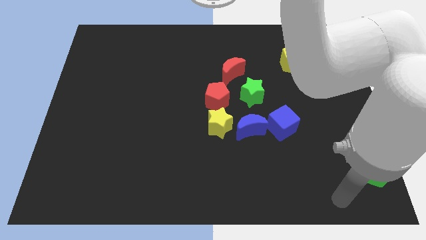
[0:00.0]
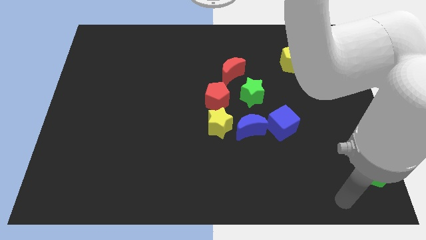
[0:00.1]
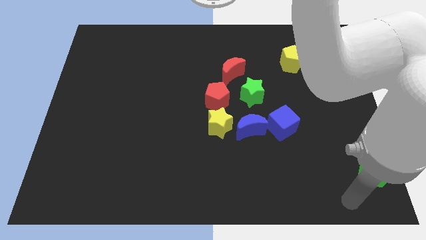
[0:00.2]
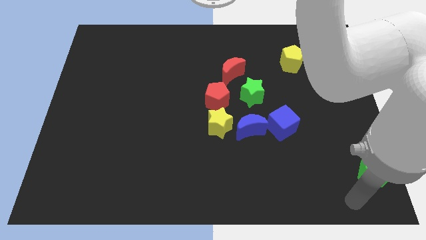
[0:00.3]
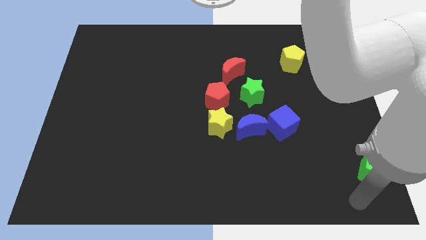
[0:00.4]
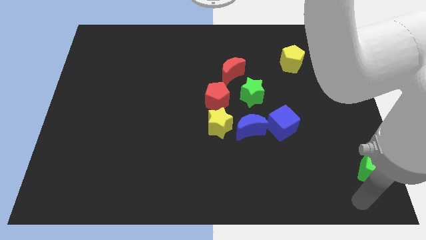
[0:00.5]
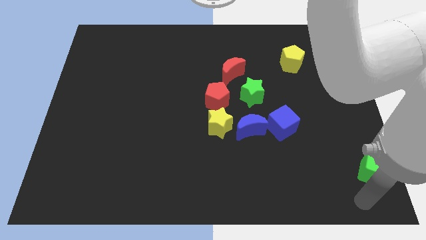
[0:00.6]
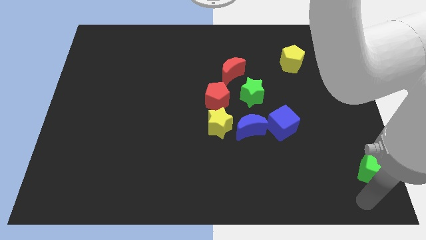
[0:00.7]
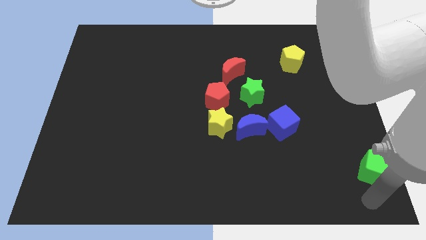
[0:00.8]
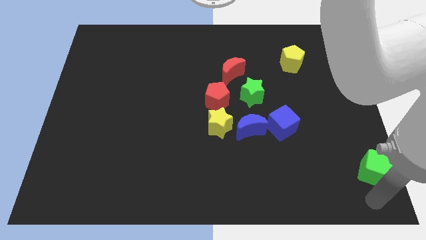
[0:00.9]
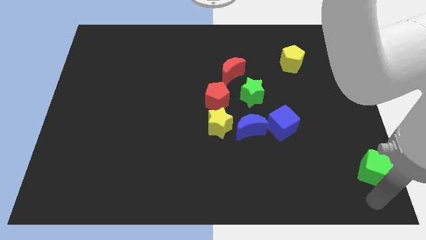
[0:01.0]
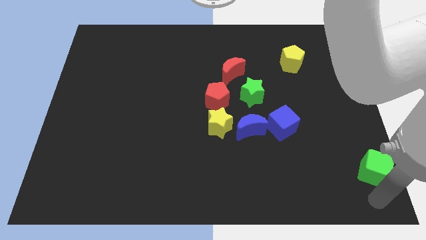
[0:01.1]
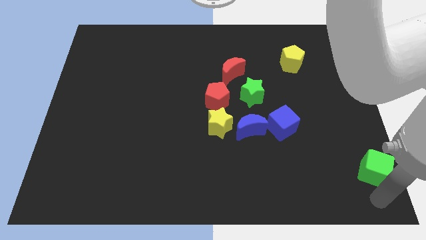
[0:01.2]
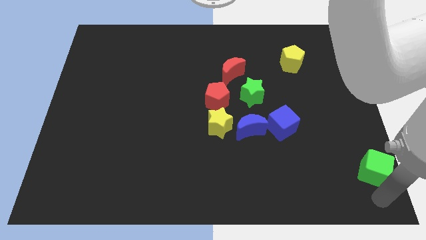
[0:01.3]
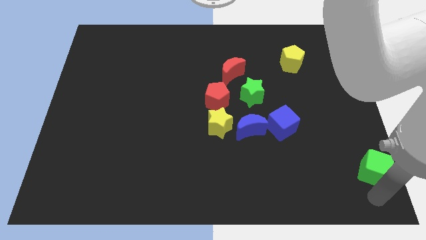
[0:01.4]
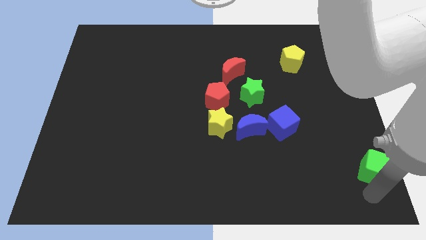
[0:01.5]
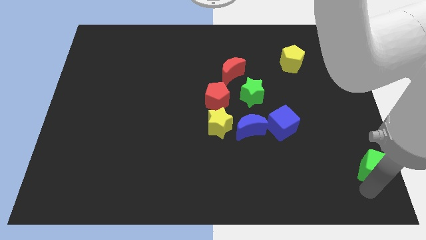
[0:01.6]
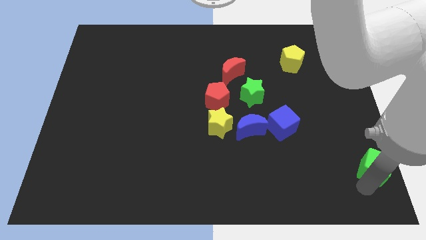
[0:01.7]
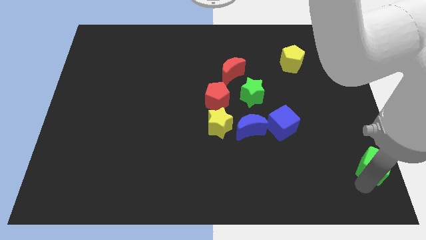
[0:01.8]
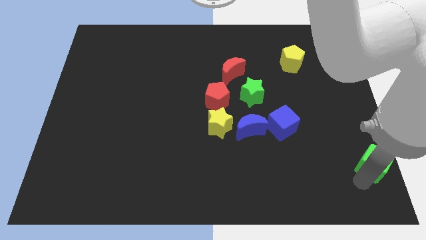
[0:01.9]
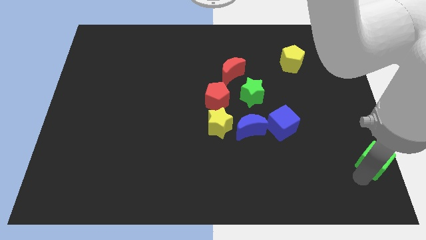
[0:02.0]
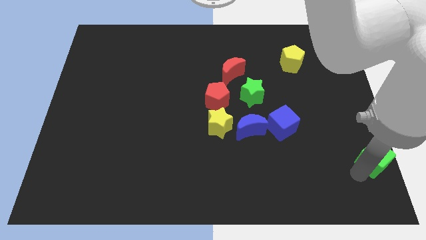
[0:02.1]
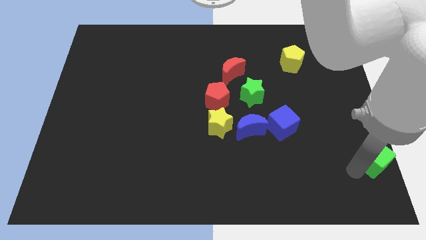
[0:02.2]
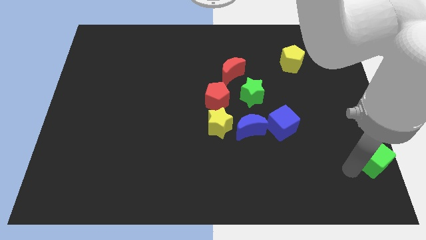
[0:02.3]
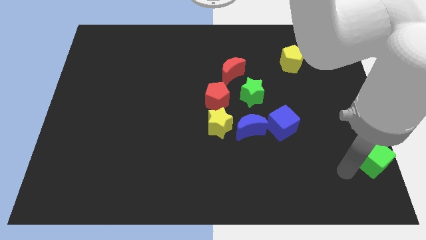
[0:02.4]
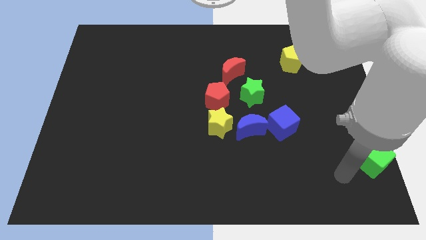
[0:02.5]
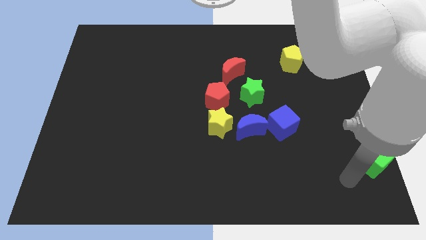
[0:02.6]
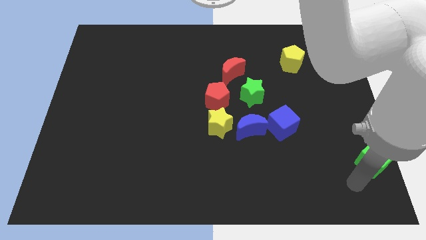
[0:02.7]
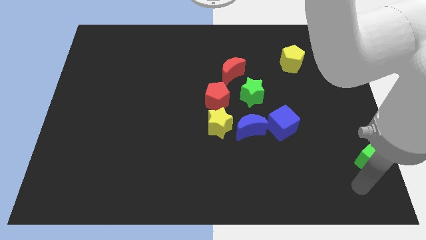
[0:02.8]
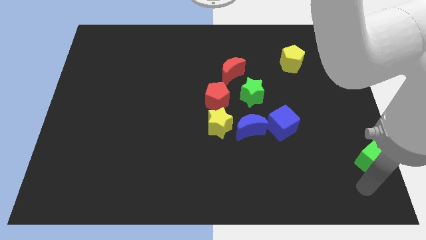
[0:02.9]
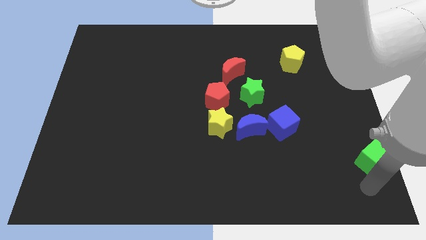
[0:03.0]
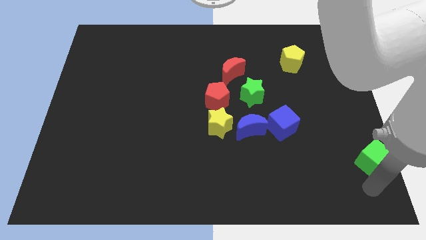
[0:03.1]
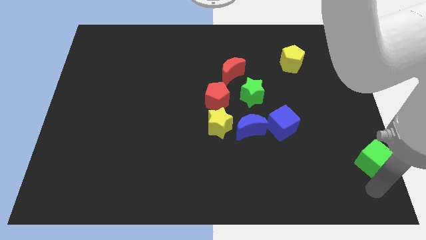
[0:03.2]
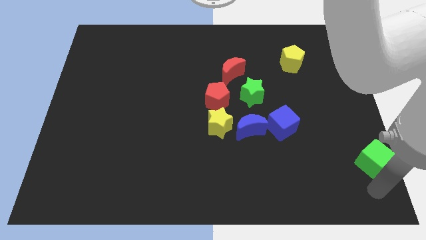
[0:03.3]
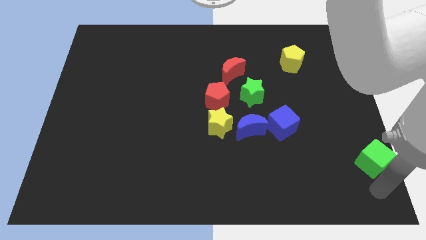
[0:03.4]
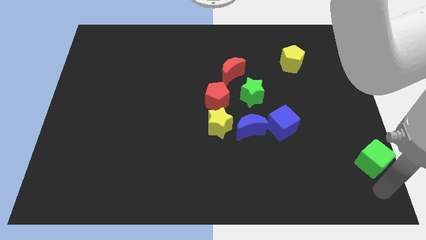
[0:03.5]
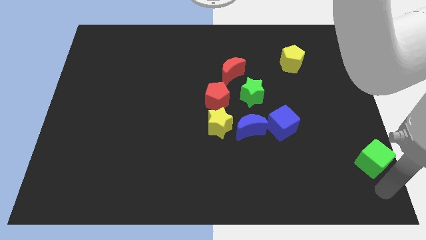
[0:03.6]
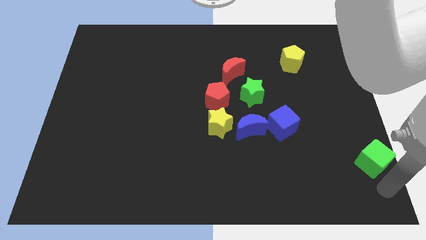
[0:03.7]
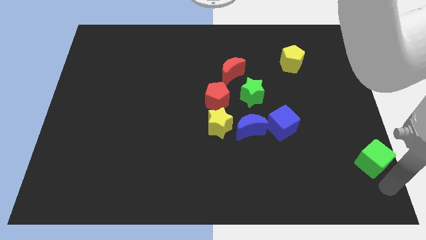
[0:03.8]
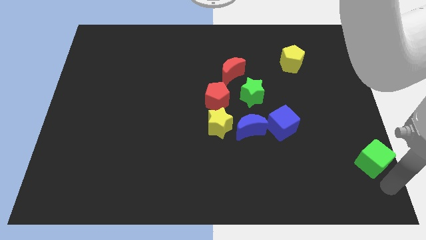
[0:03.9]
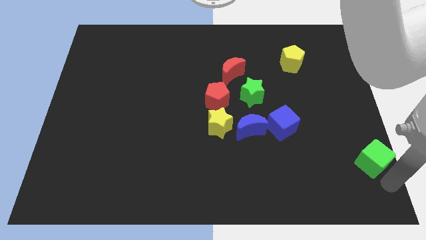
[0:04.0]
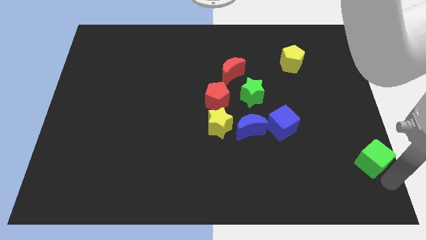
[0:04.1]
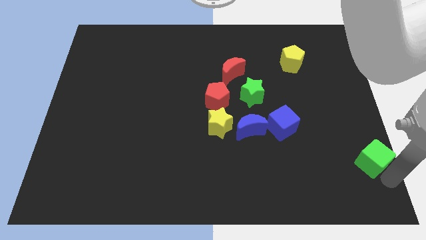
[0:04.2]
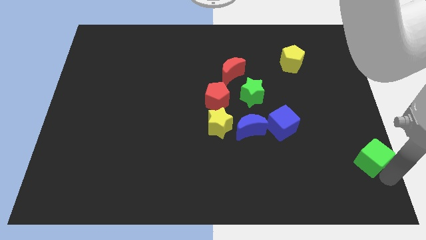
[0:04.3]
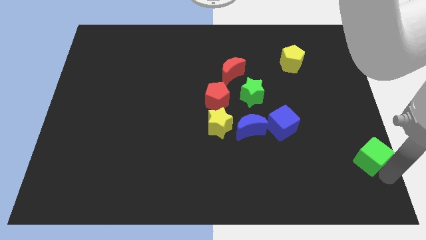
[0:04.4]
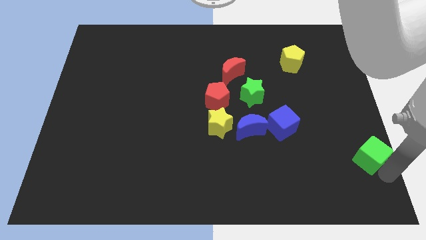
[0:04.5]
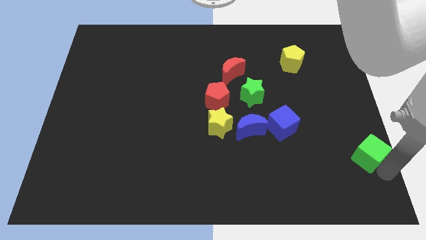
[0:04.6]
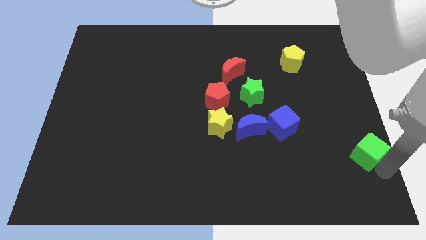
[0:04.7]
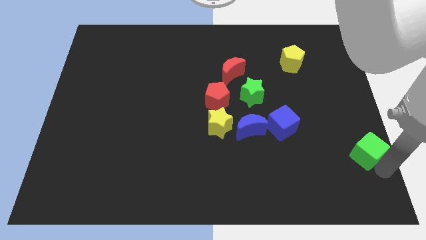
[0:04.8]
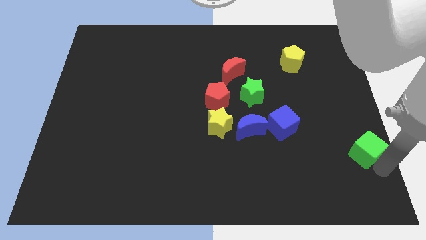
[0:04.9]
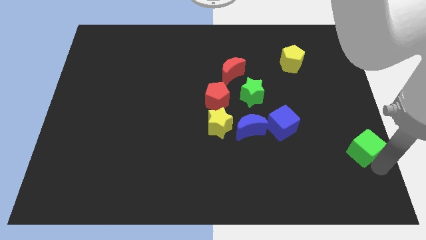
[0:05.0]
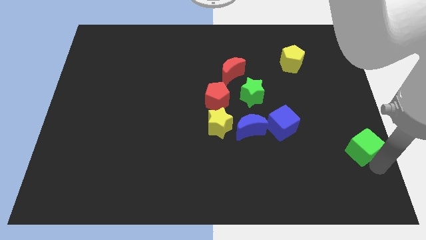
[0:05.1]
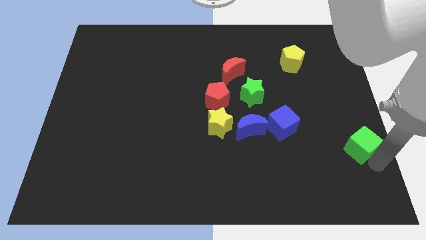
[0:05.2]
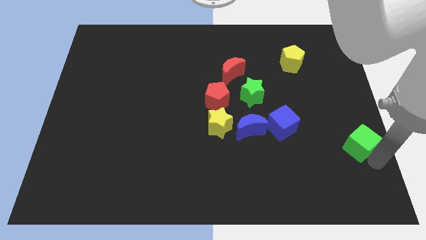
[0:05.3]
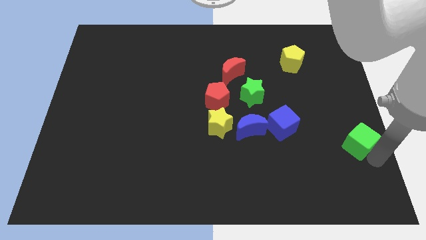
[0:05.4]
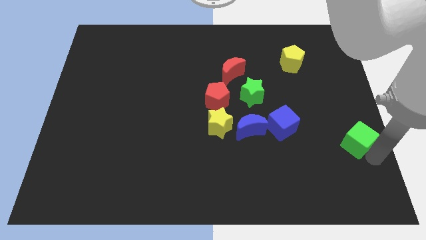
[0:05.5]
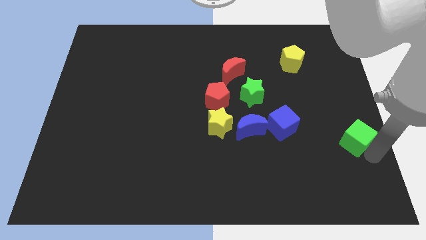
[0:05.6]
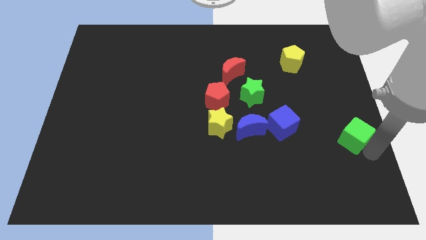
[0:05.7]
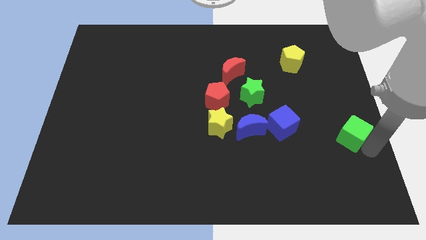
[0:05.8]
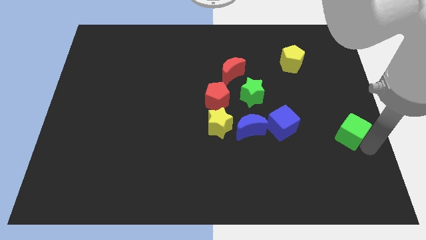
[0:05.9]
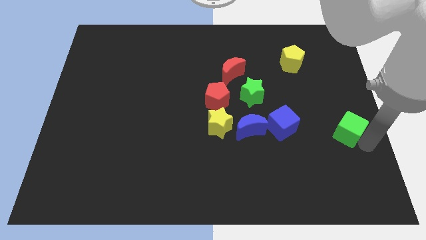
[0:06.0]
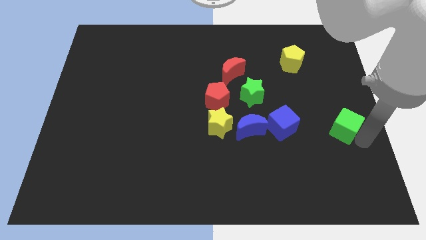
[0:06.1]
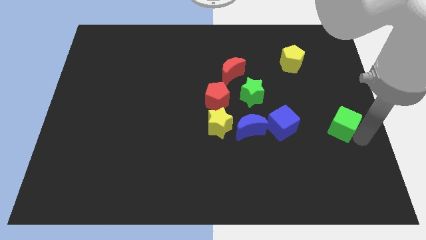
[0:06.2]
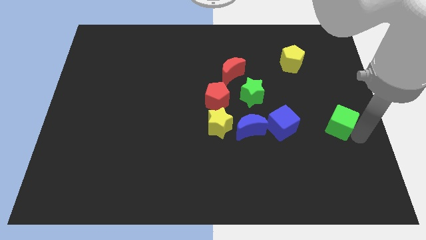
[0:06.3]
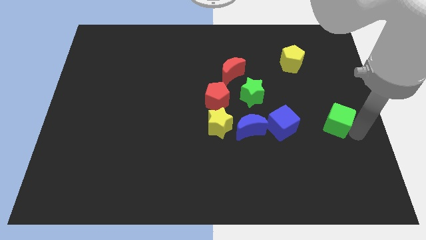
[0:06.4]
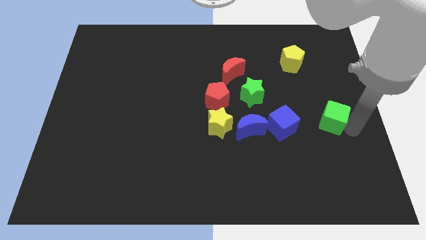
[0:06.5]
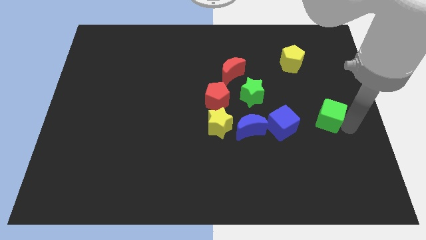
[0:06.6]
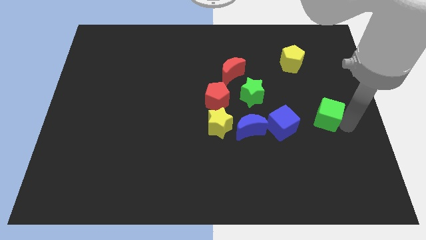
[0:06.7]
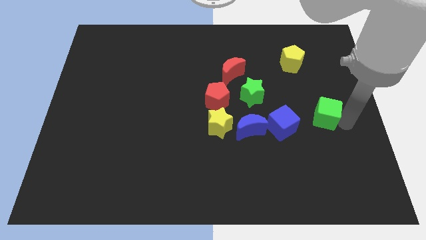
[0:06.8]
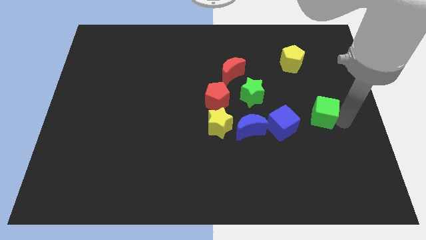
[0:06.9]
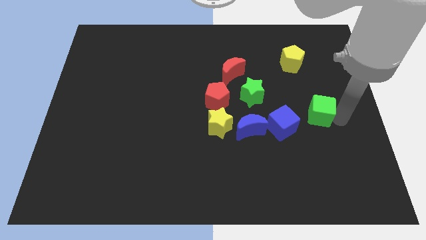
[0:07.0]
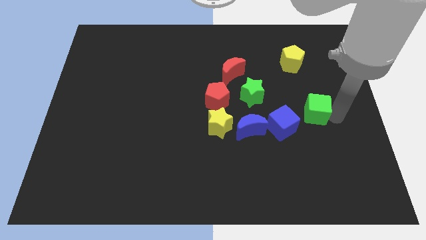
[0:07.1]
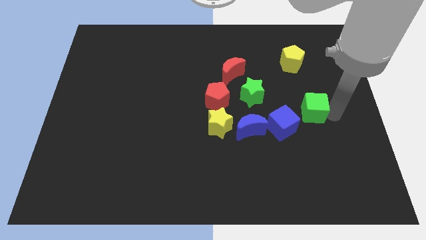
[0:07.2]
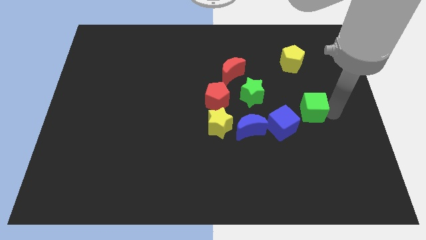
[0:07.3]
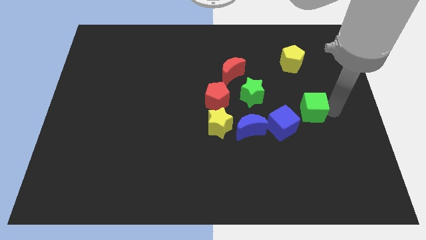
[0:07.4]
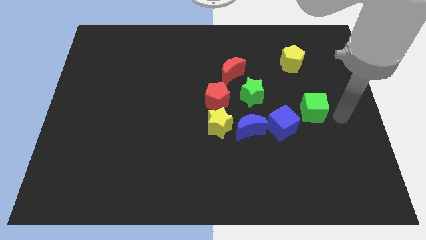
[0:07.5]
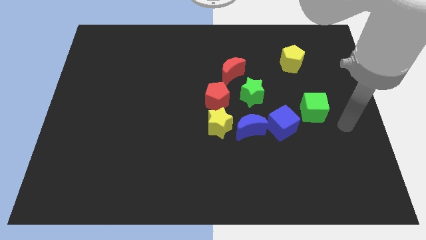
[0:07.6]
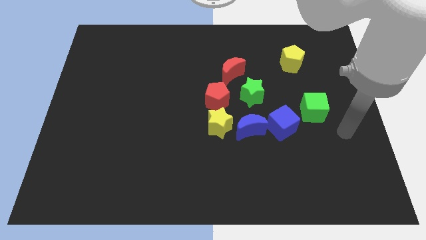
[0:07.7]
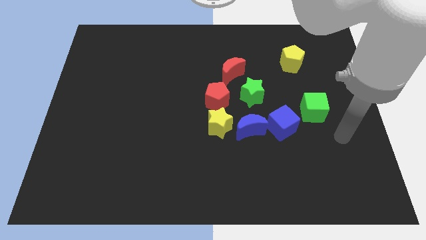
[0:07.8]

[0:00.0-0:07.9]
place the green cube to the right of the blue cube

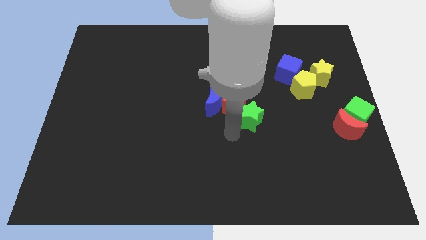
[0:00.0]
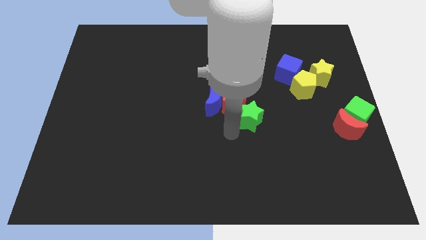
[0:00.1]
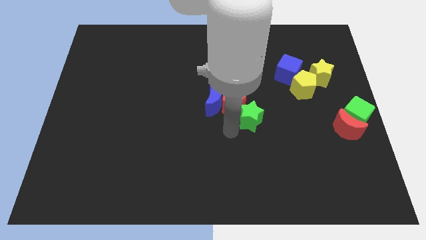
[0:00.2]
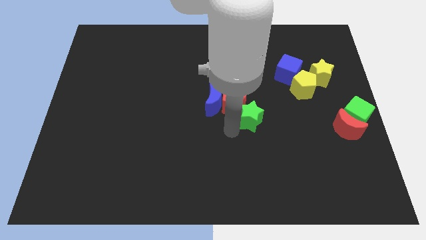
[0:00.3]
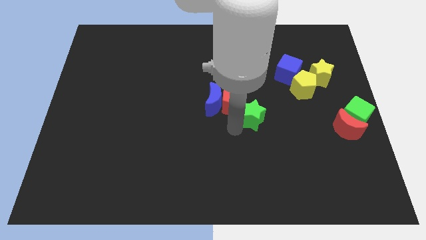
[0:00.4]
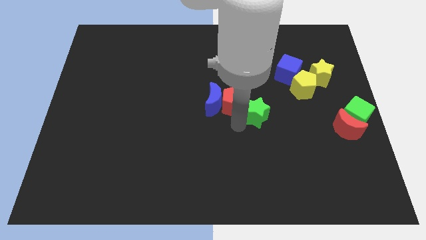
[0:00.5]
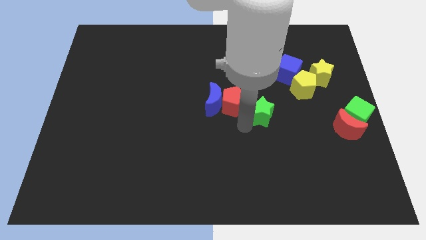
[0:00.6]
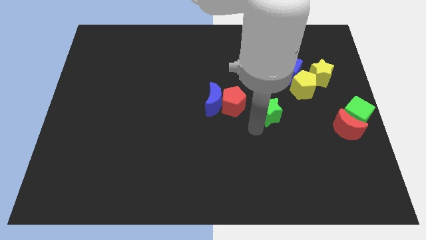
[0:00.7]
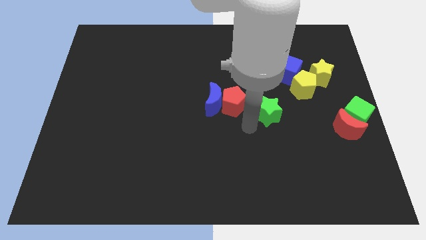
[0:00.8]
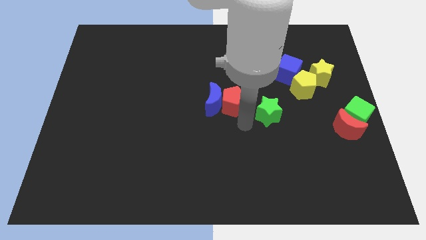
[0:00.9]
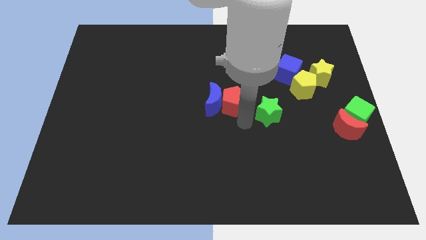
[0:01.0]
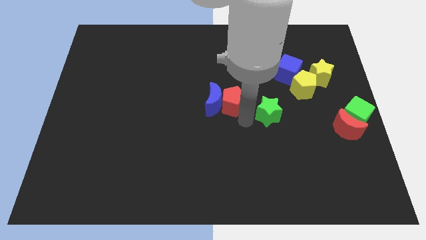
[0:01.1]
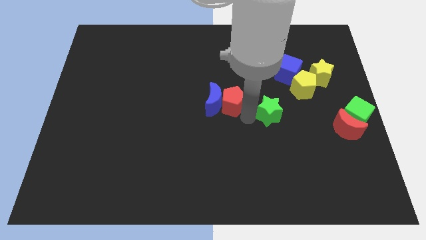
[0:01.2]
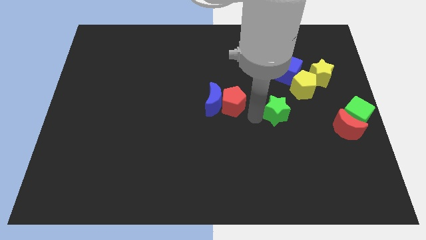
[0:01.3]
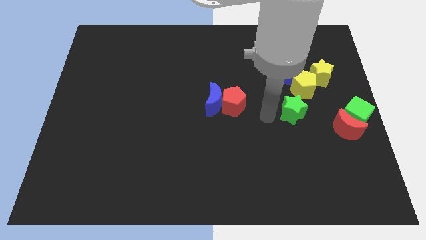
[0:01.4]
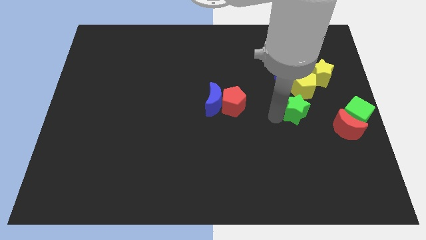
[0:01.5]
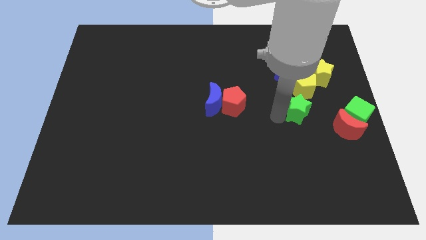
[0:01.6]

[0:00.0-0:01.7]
separate the green star from the red pentagon
